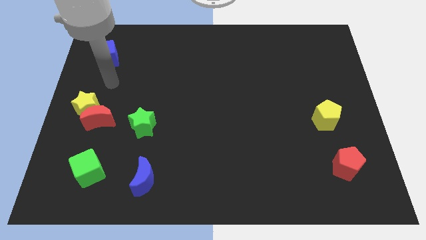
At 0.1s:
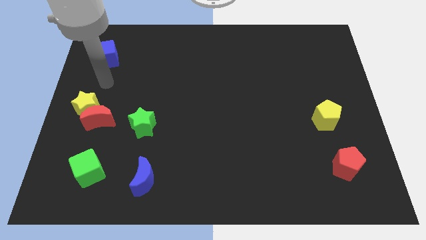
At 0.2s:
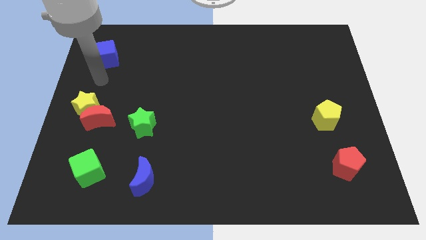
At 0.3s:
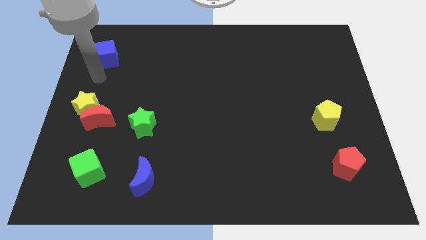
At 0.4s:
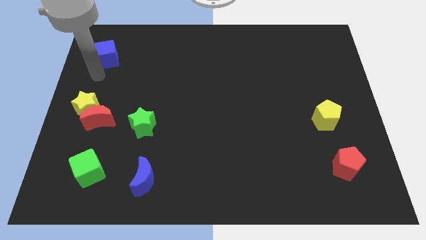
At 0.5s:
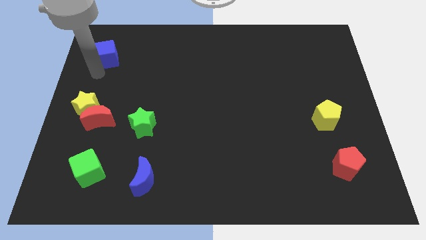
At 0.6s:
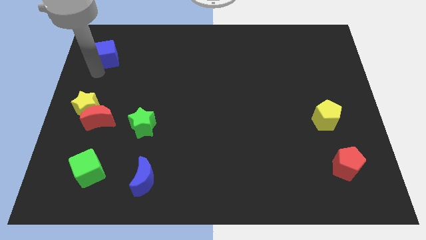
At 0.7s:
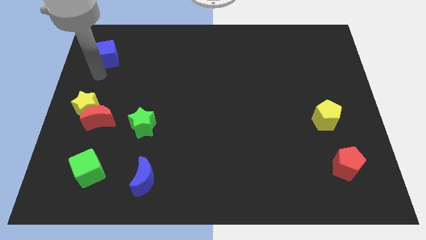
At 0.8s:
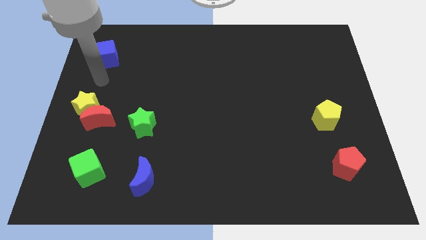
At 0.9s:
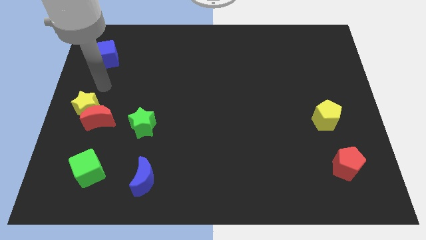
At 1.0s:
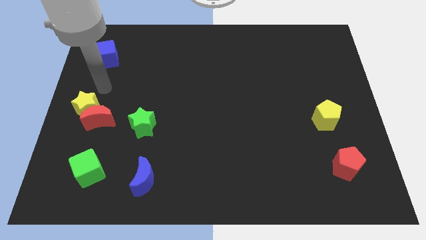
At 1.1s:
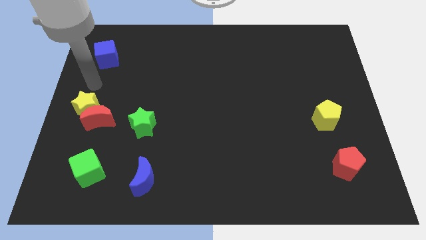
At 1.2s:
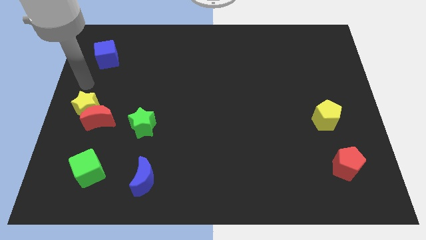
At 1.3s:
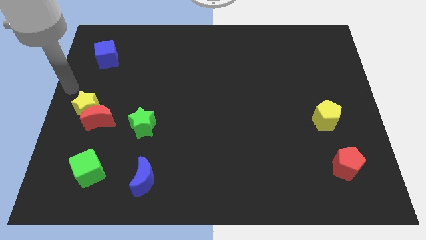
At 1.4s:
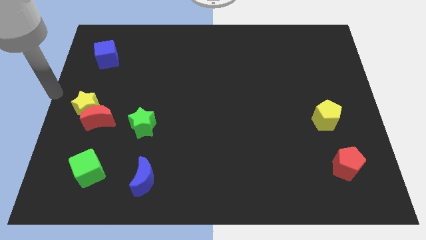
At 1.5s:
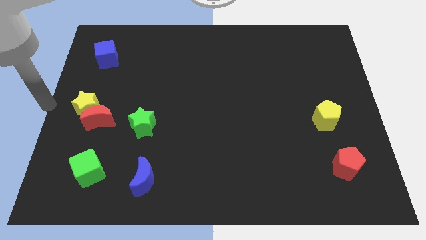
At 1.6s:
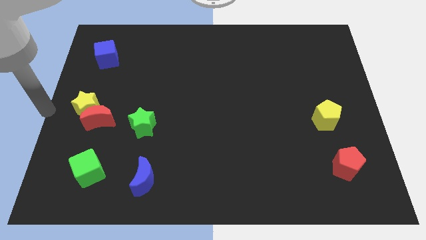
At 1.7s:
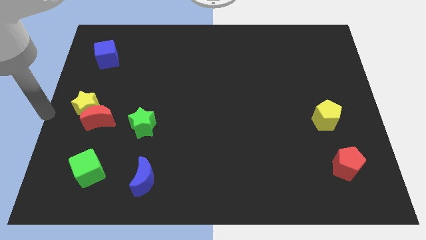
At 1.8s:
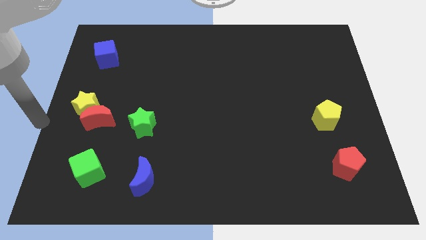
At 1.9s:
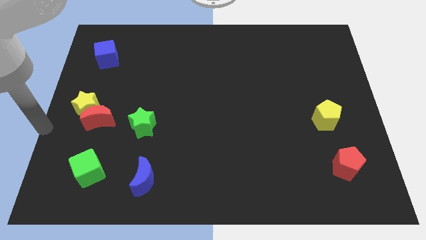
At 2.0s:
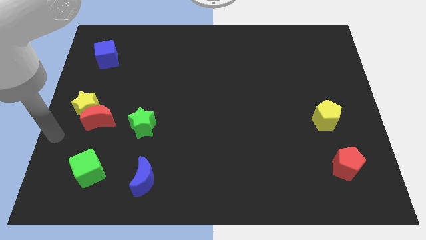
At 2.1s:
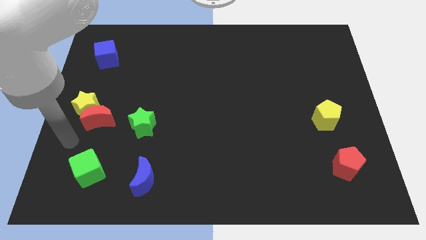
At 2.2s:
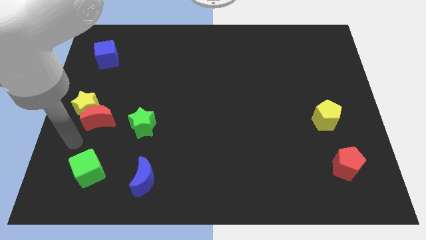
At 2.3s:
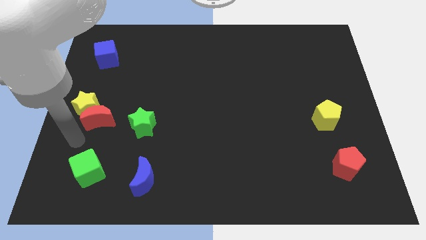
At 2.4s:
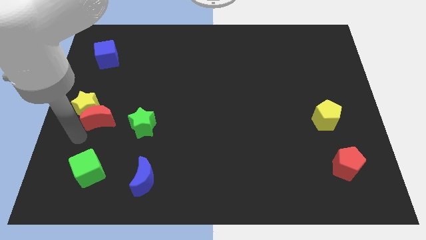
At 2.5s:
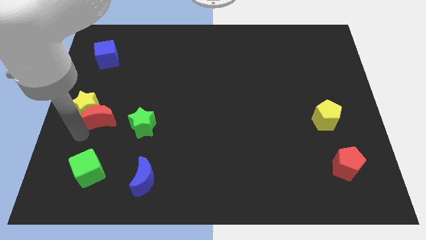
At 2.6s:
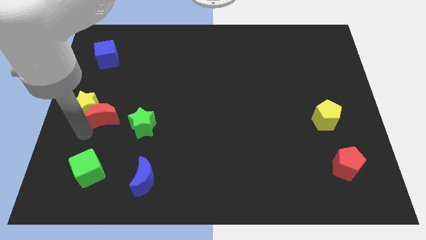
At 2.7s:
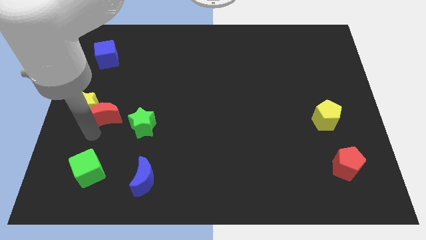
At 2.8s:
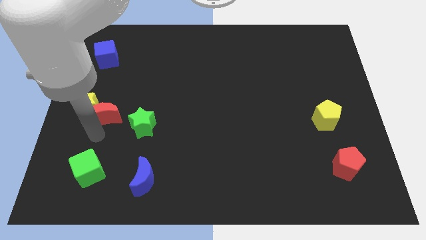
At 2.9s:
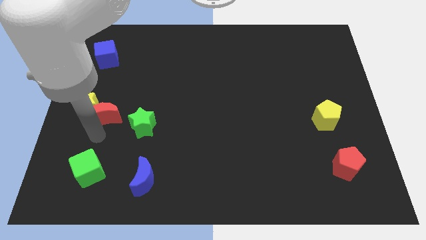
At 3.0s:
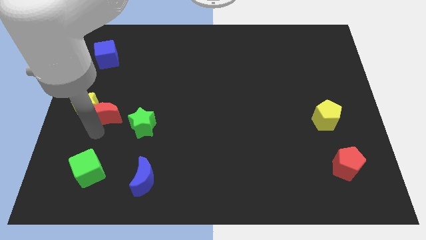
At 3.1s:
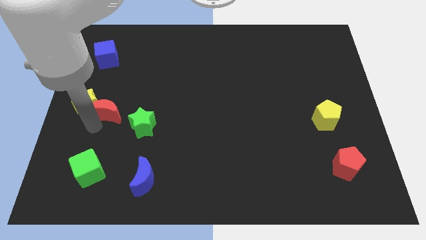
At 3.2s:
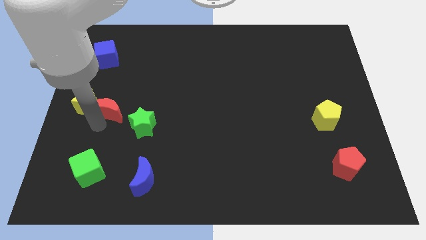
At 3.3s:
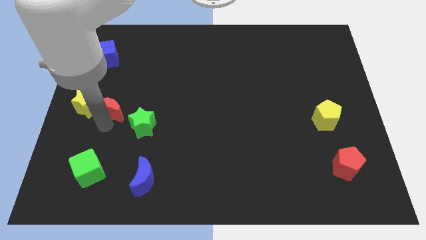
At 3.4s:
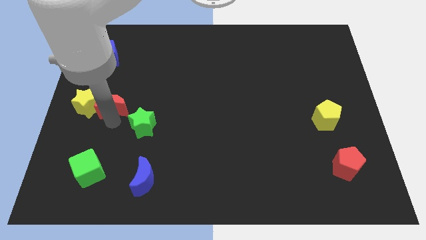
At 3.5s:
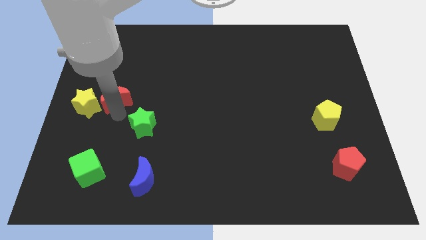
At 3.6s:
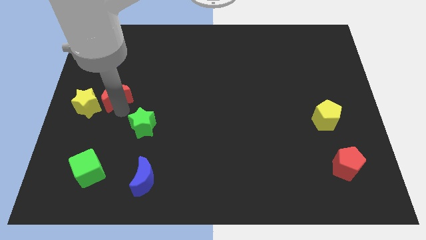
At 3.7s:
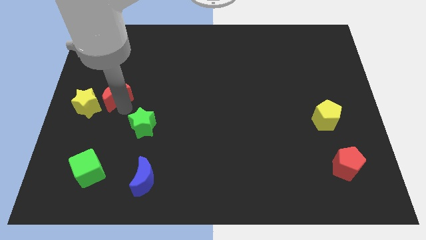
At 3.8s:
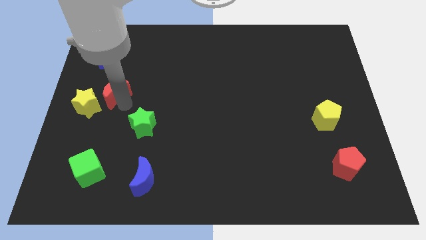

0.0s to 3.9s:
separate red crescent and the yellow star

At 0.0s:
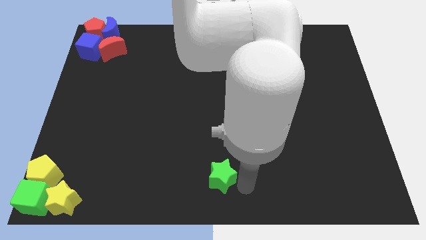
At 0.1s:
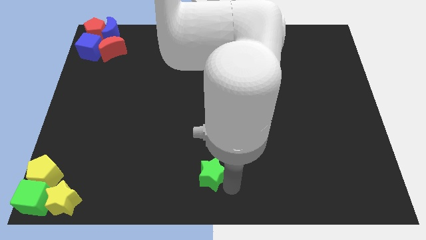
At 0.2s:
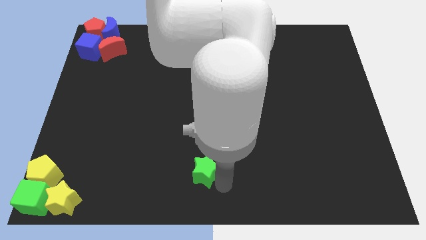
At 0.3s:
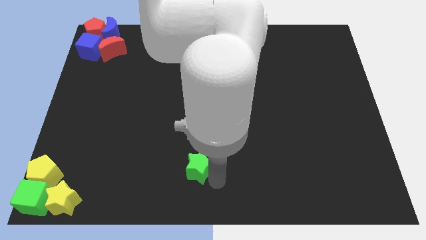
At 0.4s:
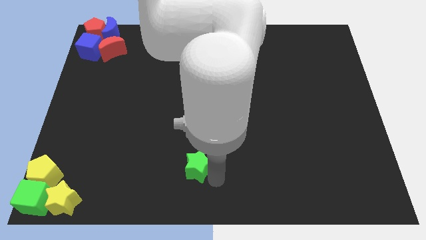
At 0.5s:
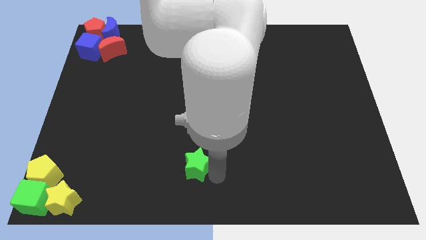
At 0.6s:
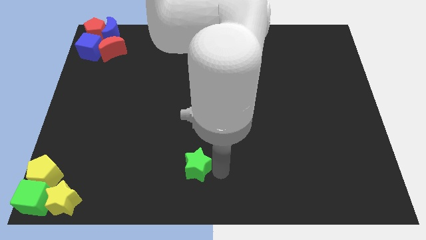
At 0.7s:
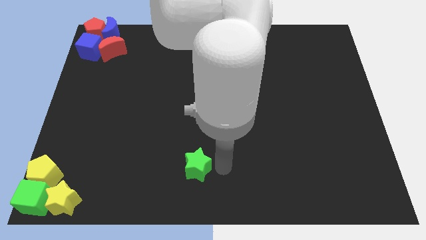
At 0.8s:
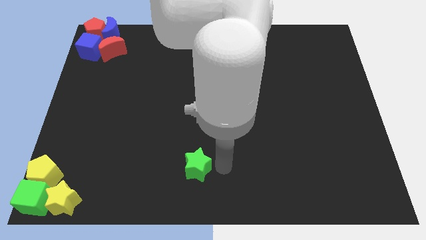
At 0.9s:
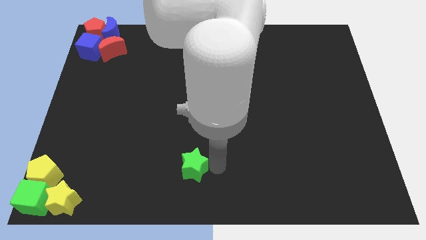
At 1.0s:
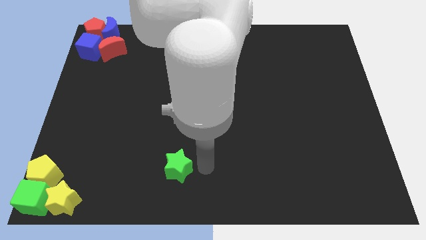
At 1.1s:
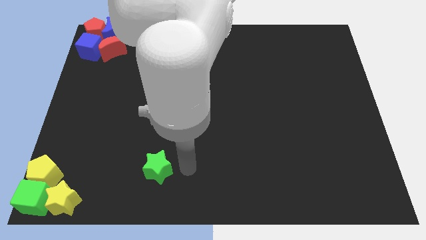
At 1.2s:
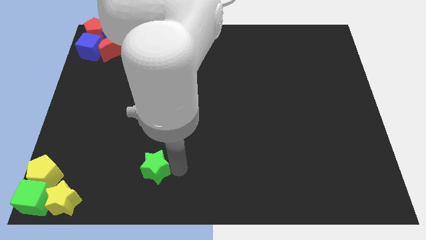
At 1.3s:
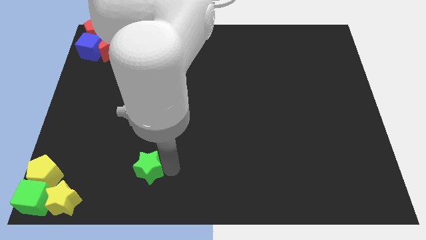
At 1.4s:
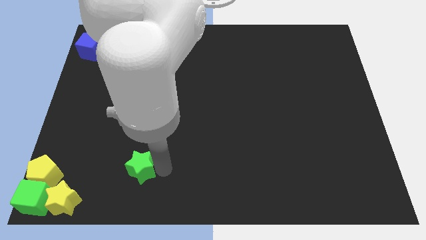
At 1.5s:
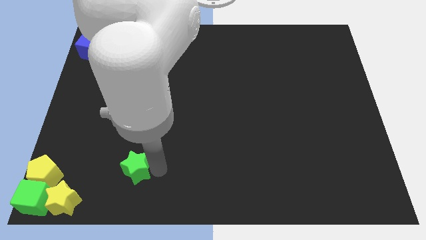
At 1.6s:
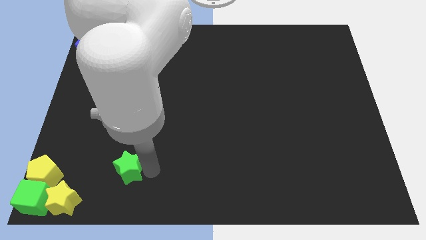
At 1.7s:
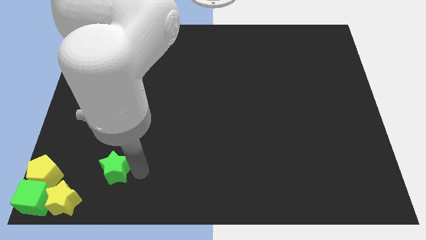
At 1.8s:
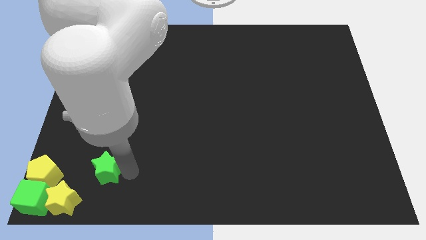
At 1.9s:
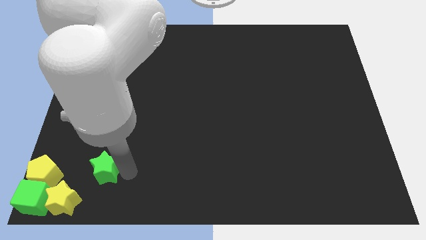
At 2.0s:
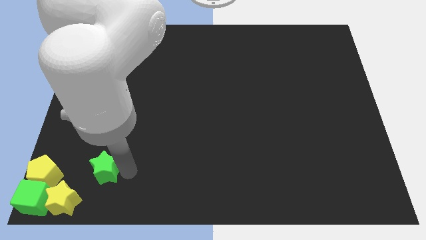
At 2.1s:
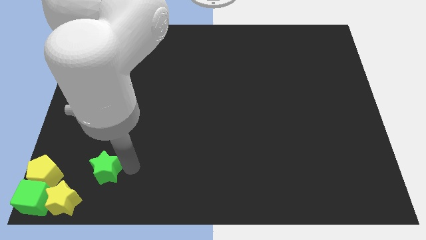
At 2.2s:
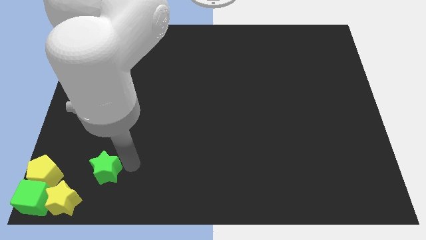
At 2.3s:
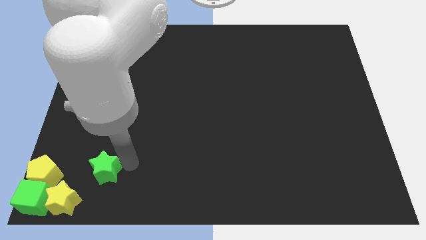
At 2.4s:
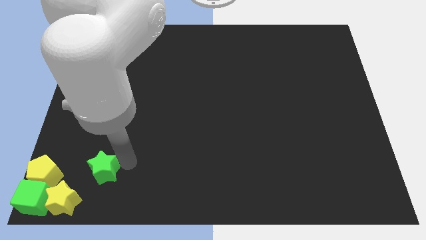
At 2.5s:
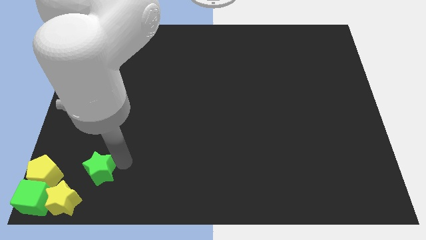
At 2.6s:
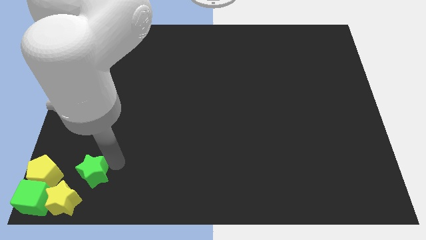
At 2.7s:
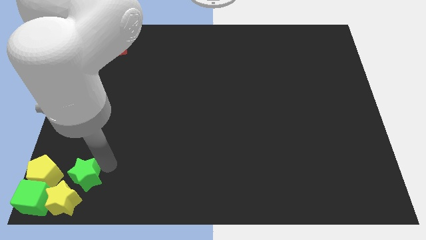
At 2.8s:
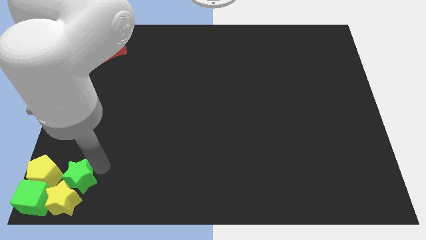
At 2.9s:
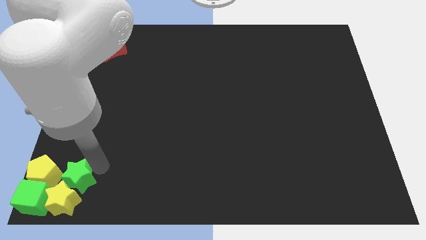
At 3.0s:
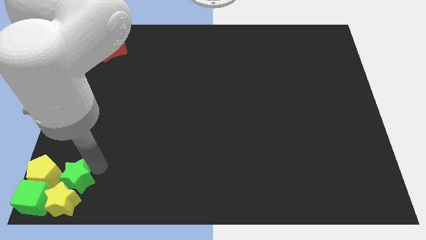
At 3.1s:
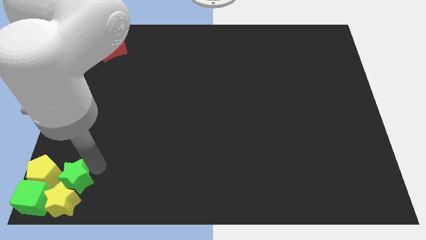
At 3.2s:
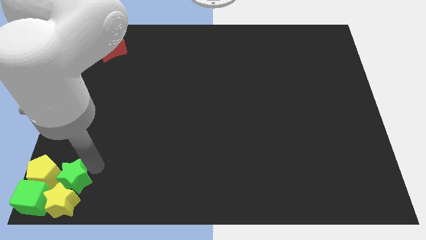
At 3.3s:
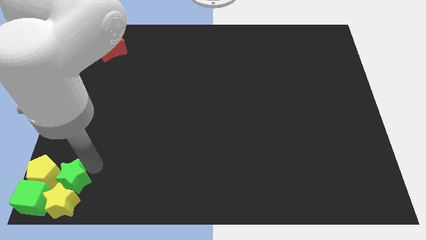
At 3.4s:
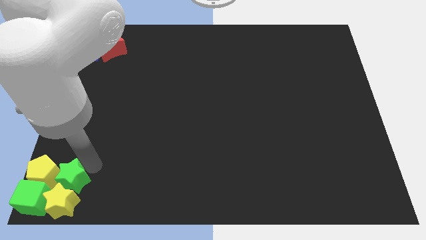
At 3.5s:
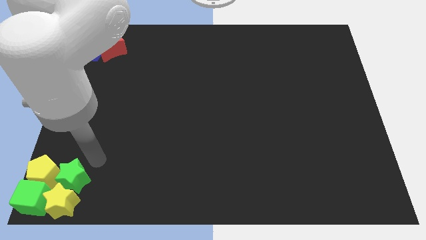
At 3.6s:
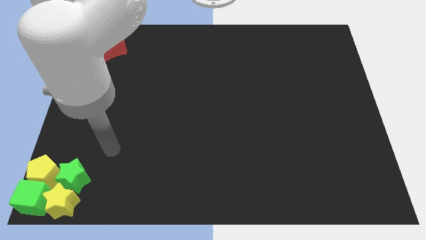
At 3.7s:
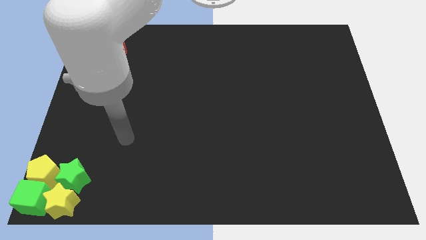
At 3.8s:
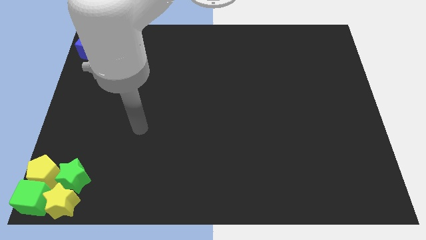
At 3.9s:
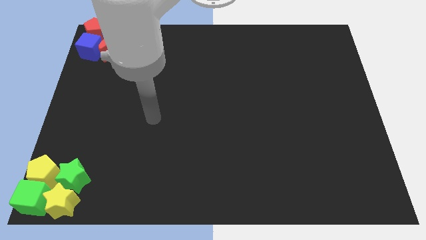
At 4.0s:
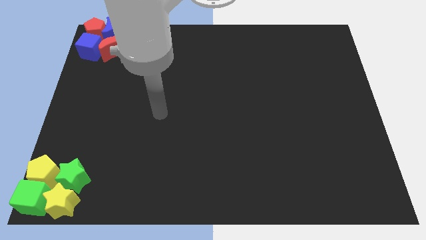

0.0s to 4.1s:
push the green star into the group of blocks at the bottom left corner of the table

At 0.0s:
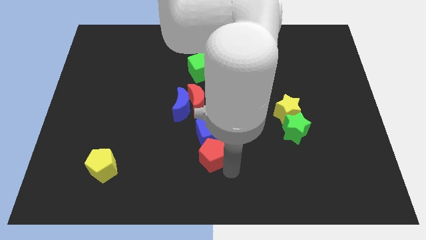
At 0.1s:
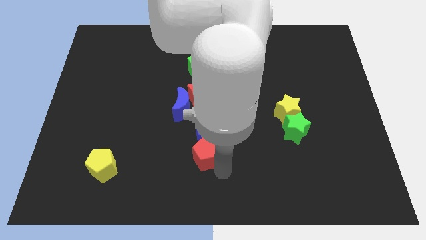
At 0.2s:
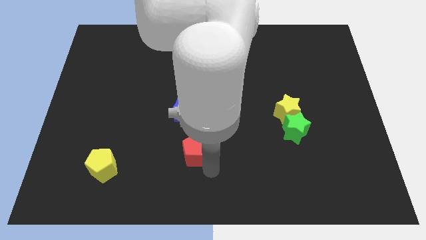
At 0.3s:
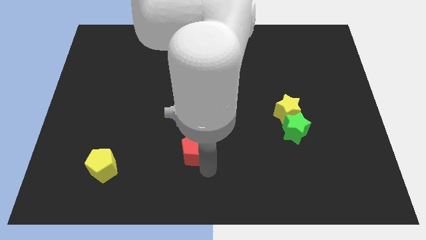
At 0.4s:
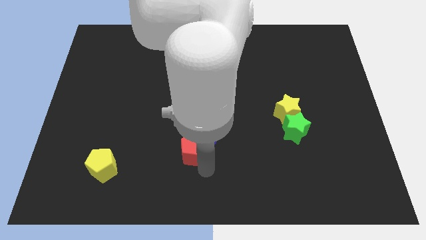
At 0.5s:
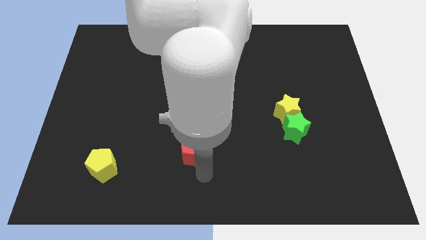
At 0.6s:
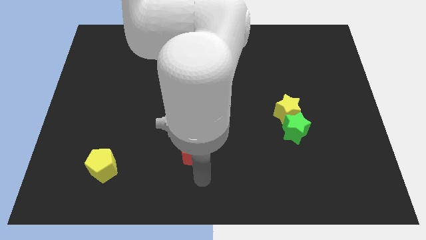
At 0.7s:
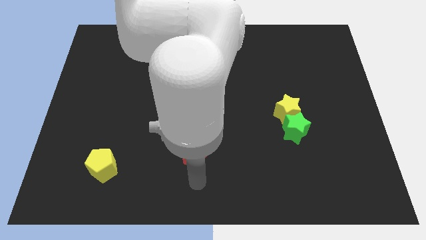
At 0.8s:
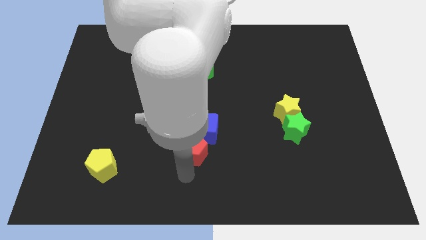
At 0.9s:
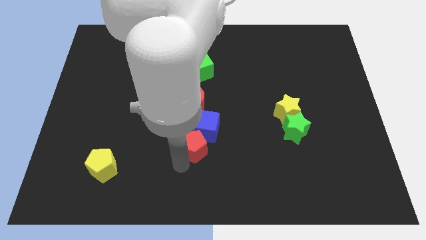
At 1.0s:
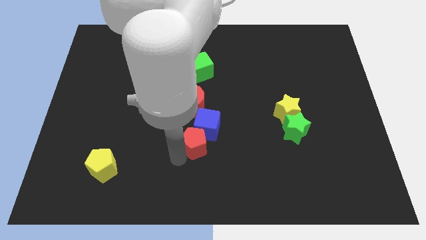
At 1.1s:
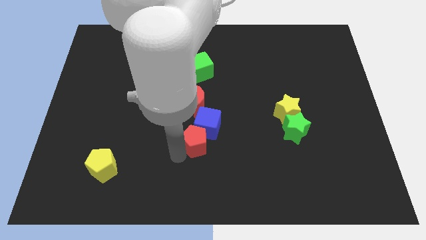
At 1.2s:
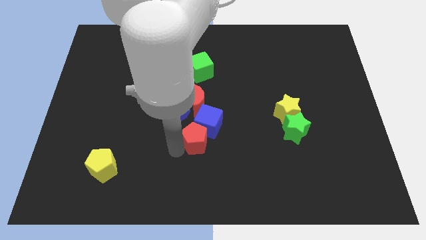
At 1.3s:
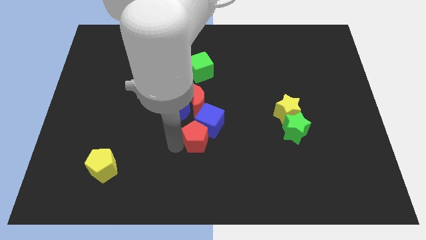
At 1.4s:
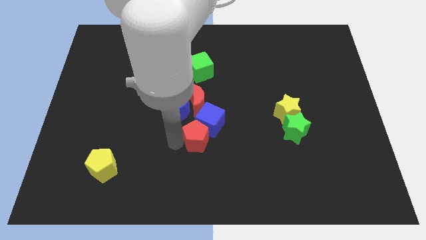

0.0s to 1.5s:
slide the red pentagon towards the blue cube
